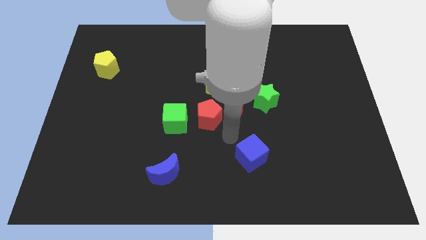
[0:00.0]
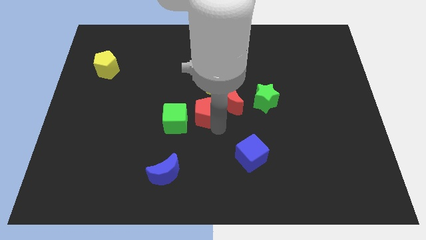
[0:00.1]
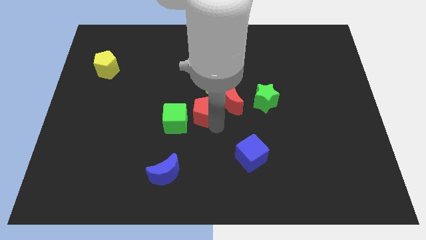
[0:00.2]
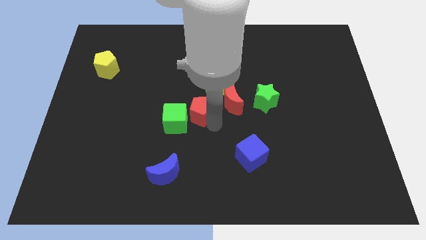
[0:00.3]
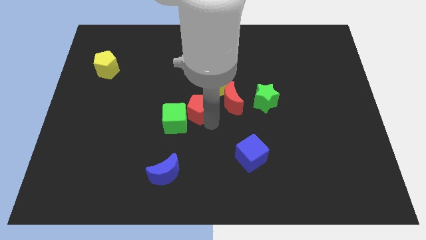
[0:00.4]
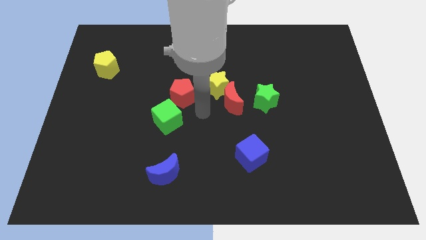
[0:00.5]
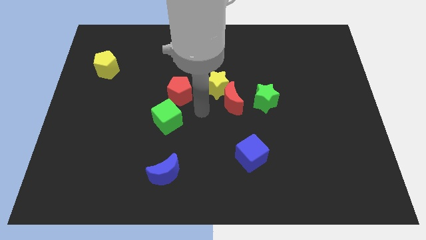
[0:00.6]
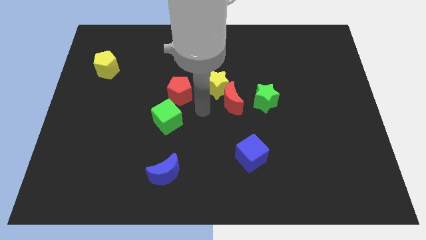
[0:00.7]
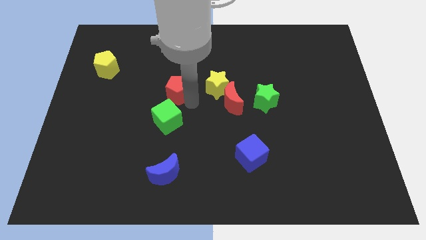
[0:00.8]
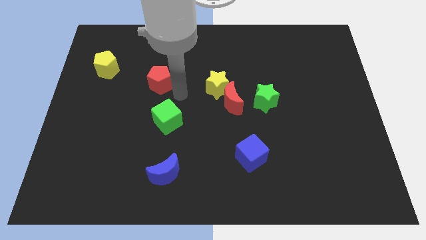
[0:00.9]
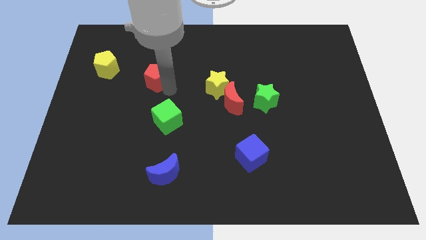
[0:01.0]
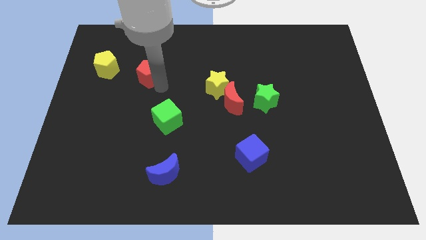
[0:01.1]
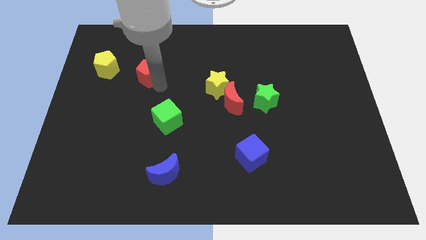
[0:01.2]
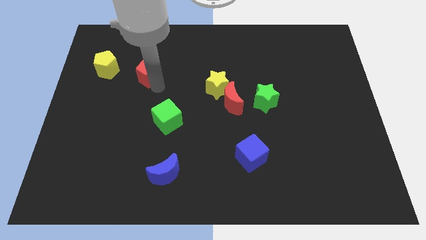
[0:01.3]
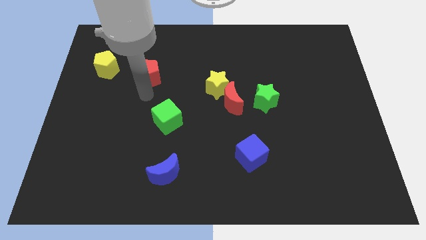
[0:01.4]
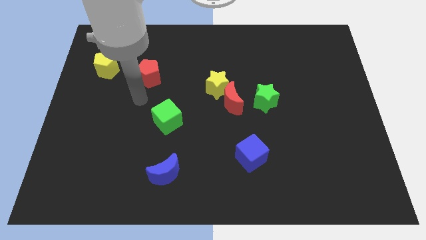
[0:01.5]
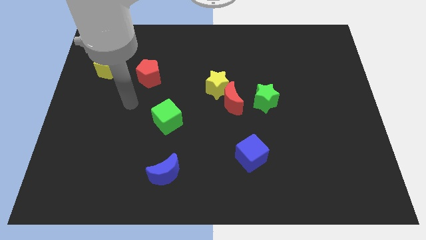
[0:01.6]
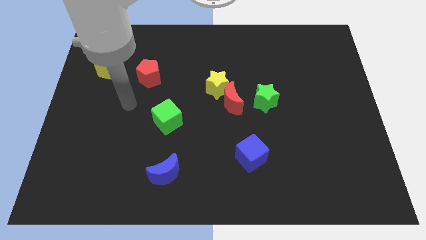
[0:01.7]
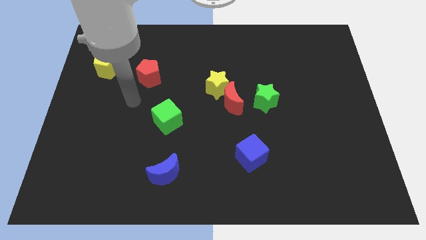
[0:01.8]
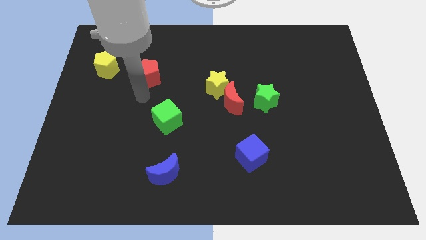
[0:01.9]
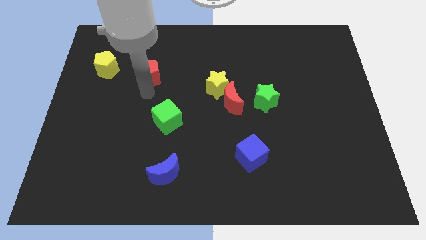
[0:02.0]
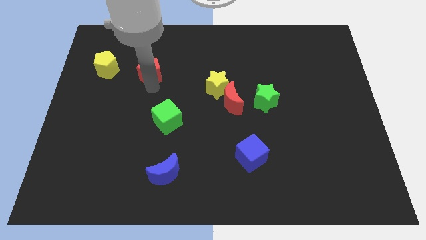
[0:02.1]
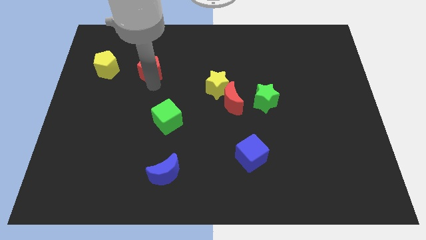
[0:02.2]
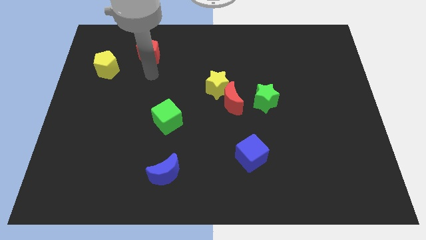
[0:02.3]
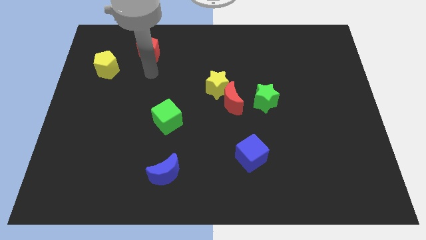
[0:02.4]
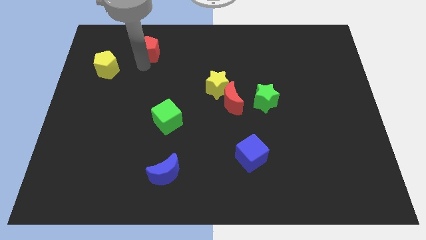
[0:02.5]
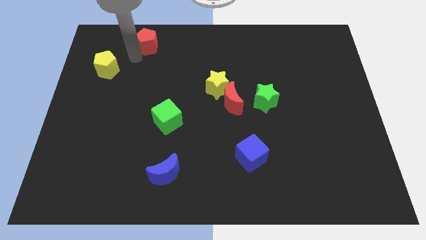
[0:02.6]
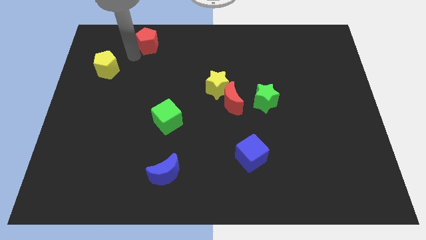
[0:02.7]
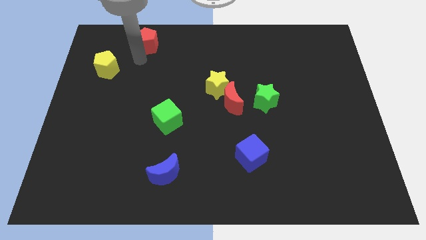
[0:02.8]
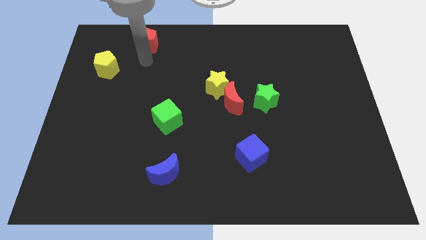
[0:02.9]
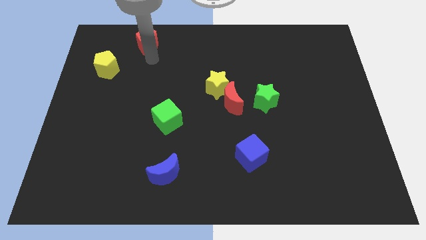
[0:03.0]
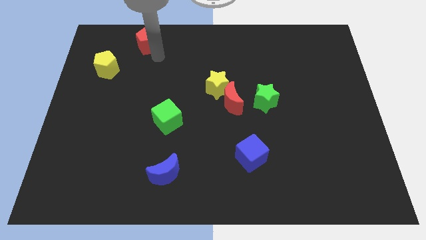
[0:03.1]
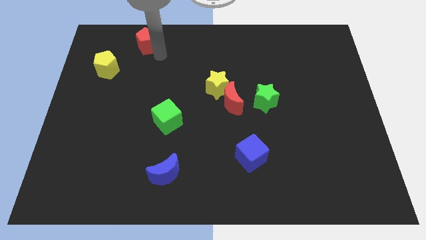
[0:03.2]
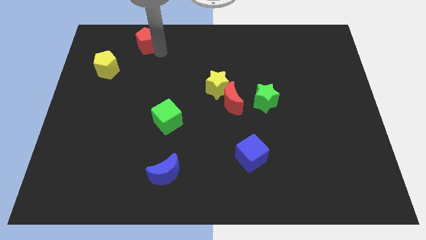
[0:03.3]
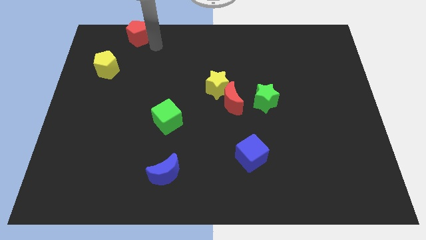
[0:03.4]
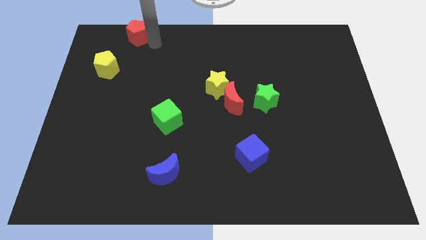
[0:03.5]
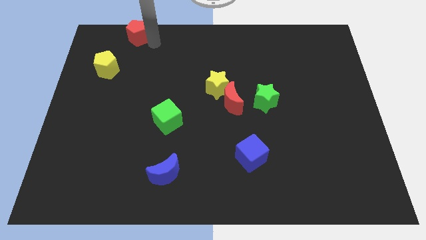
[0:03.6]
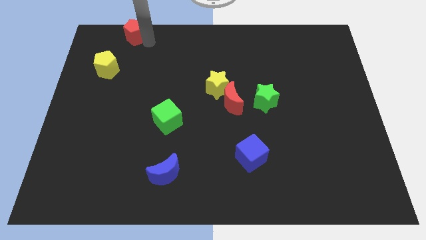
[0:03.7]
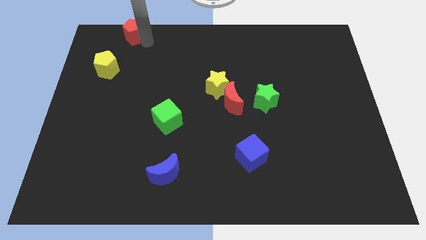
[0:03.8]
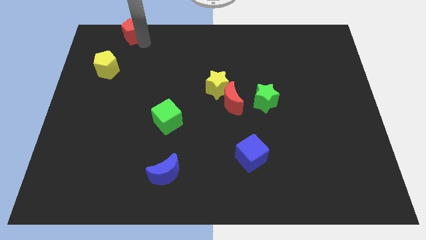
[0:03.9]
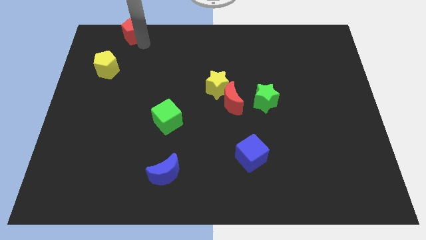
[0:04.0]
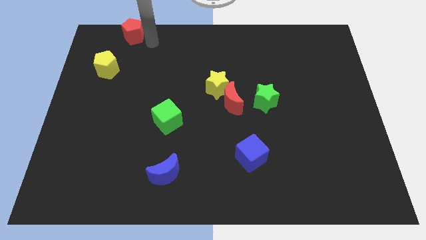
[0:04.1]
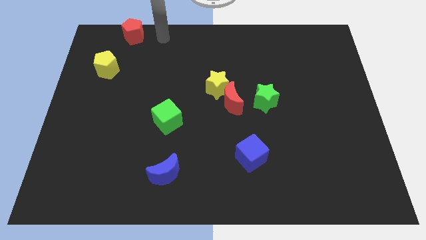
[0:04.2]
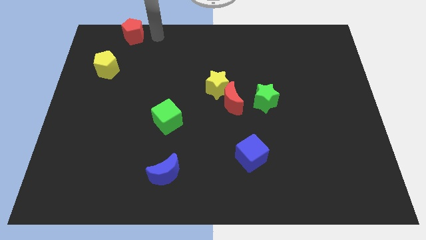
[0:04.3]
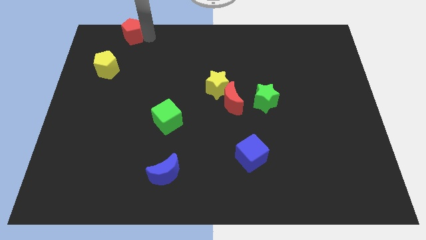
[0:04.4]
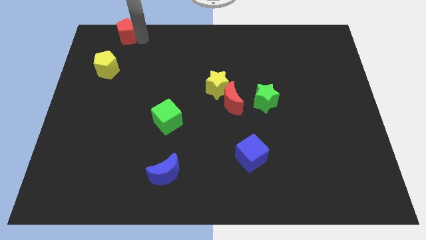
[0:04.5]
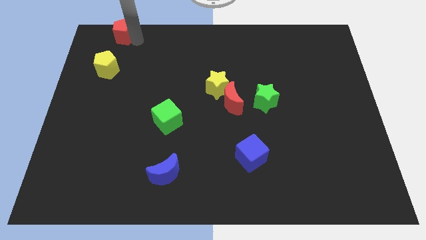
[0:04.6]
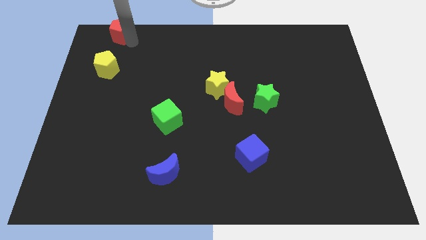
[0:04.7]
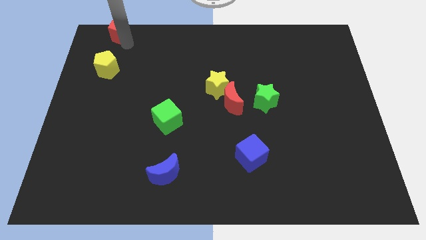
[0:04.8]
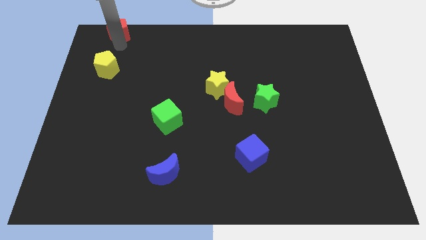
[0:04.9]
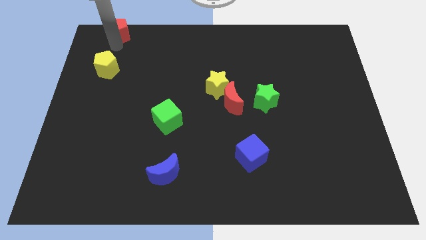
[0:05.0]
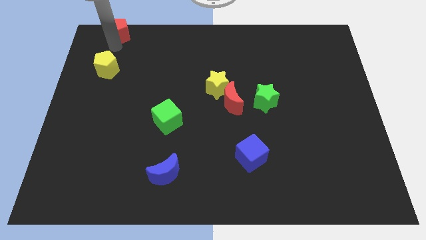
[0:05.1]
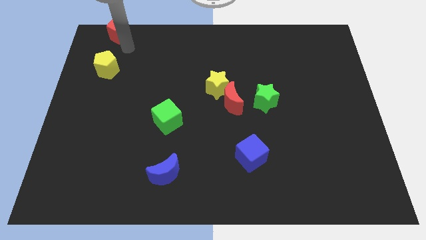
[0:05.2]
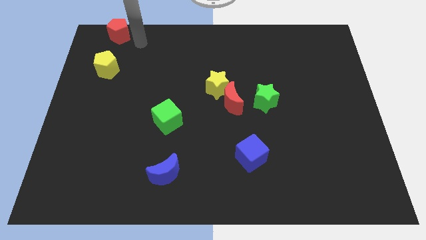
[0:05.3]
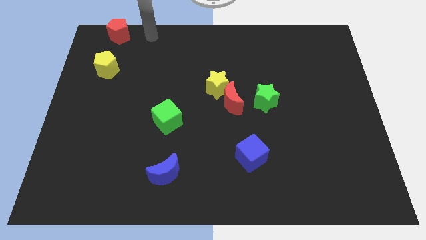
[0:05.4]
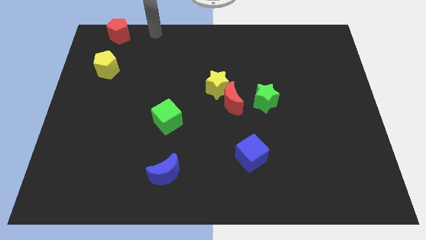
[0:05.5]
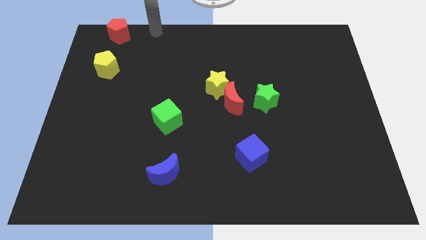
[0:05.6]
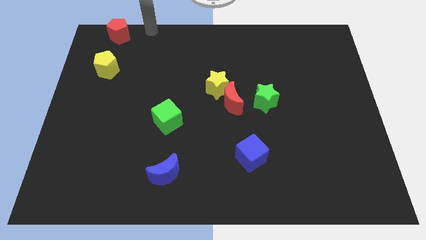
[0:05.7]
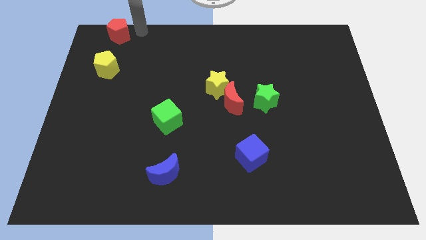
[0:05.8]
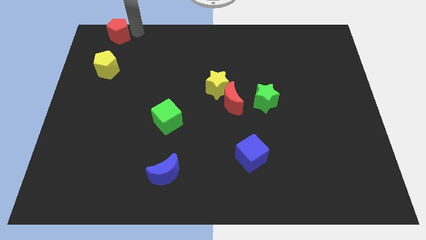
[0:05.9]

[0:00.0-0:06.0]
place the red pentagon to the top left of the board

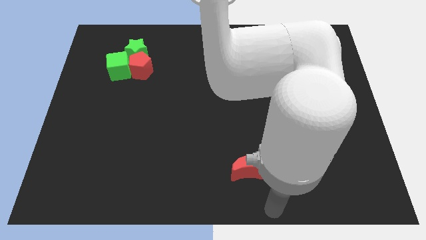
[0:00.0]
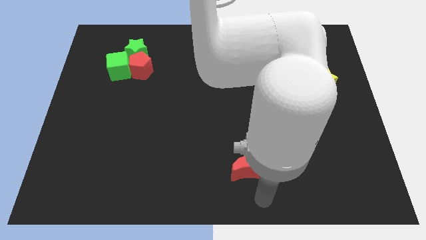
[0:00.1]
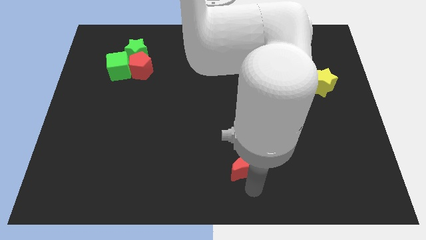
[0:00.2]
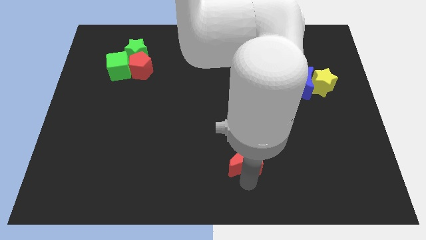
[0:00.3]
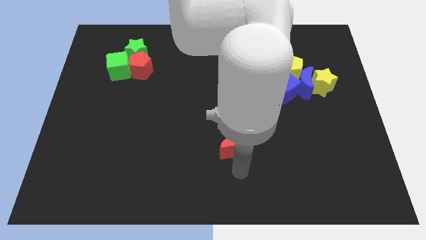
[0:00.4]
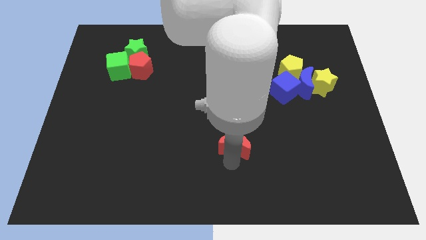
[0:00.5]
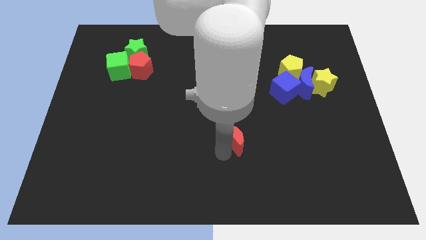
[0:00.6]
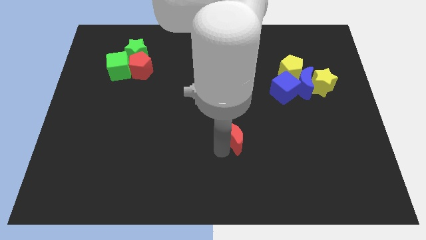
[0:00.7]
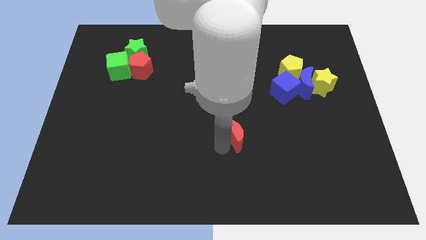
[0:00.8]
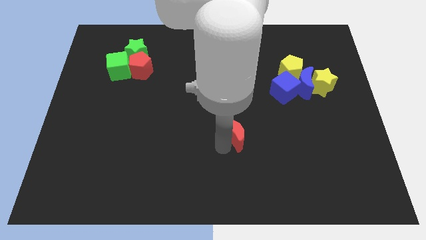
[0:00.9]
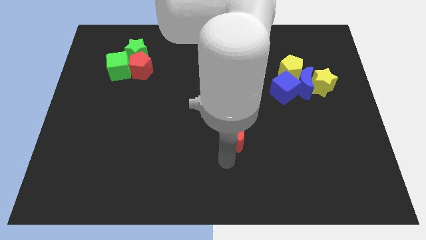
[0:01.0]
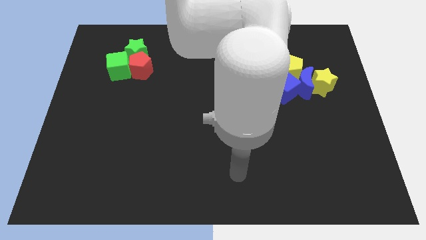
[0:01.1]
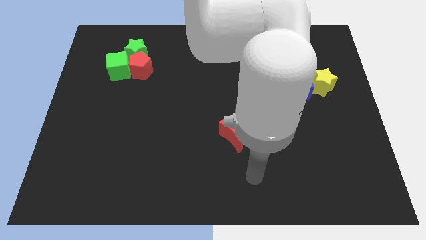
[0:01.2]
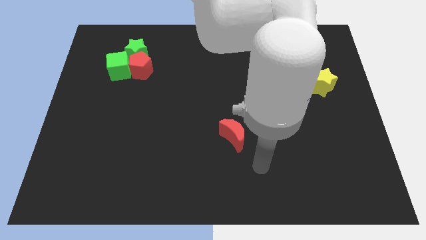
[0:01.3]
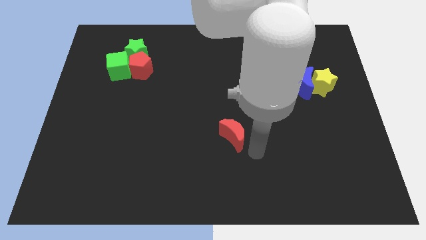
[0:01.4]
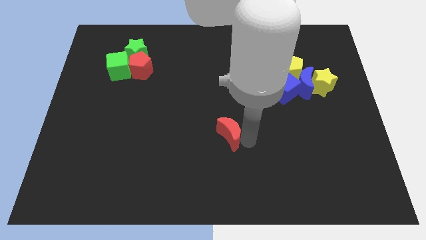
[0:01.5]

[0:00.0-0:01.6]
push the red crescent towards the top side of the board

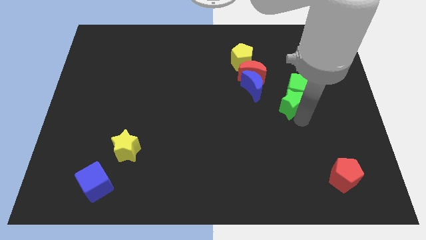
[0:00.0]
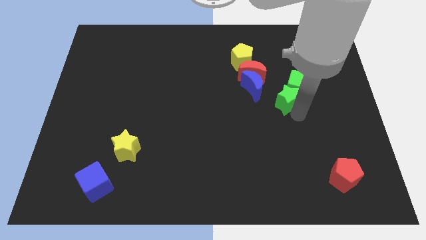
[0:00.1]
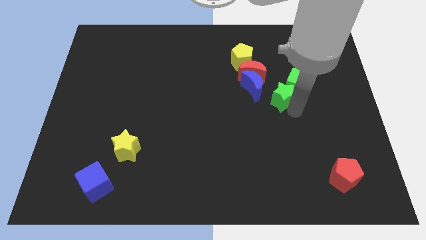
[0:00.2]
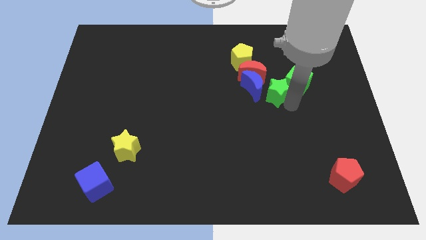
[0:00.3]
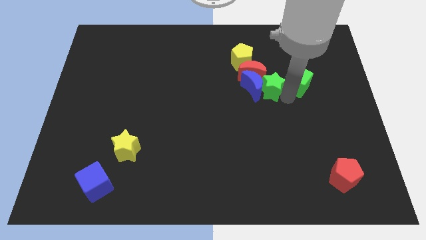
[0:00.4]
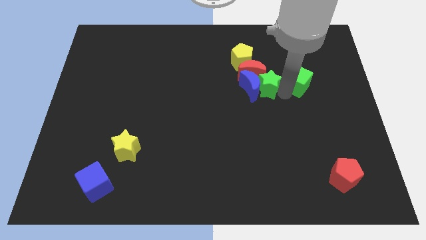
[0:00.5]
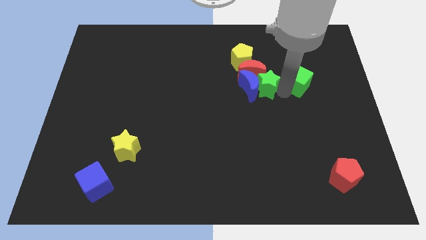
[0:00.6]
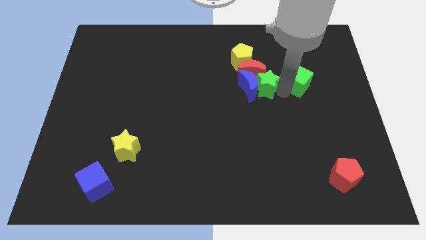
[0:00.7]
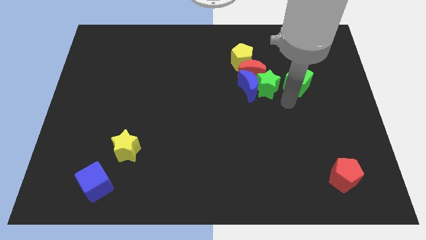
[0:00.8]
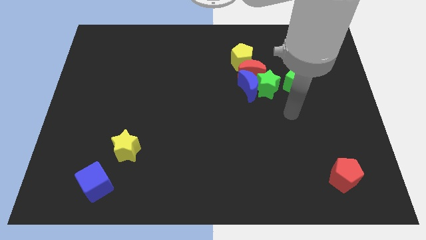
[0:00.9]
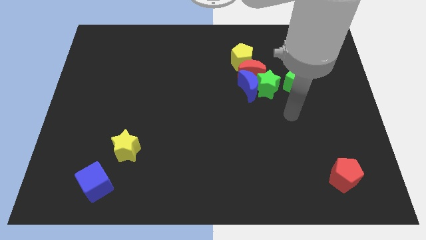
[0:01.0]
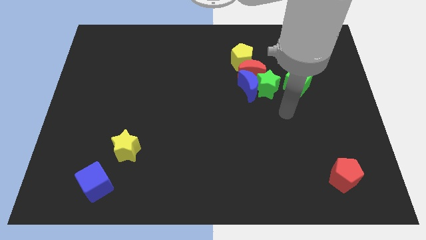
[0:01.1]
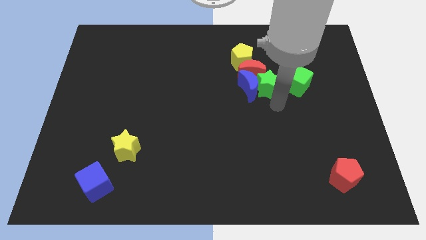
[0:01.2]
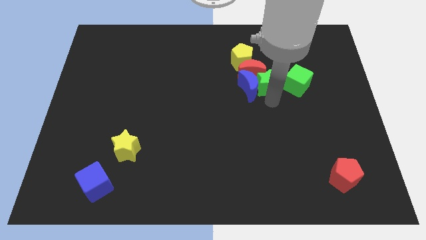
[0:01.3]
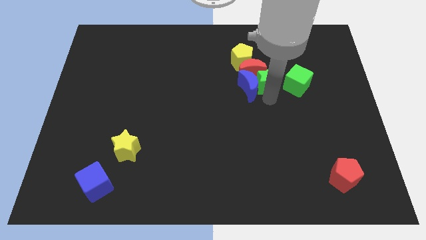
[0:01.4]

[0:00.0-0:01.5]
push the green star into the red crescent
